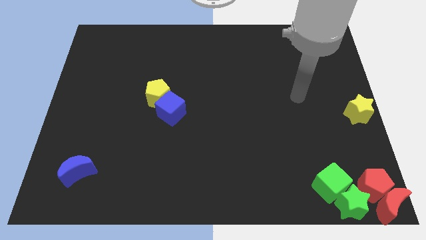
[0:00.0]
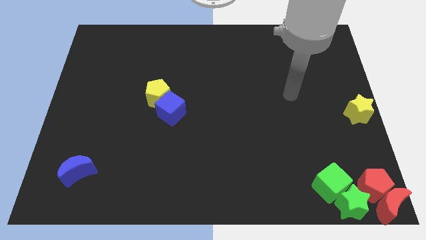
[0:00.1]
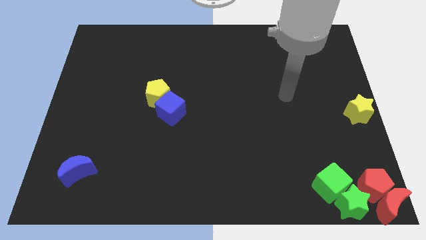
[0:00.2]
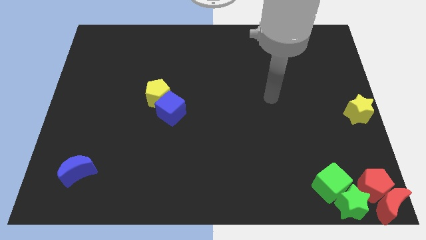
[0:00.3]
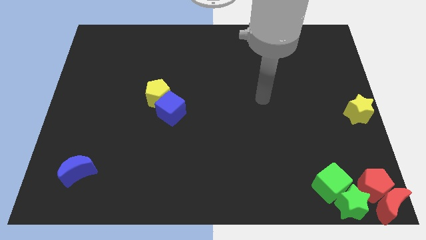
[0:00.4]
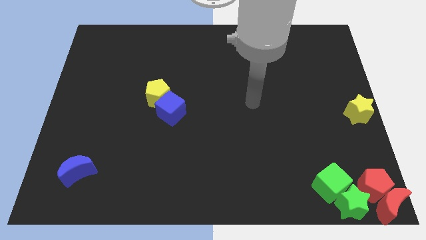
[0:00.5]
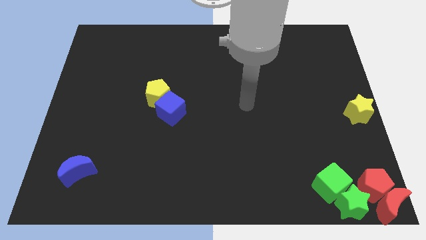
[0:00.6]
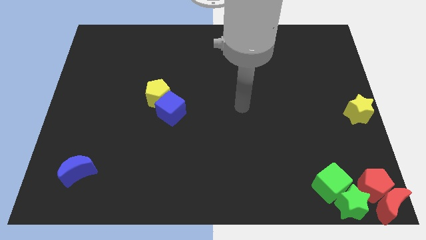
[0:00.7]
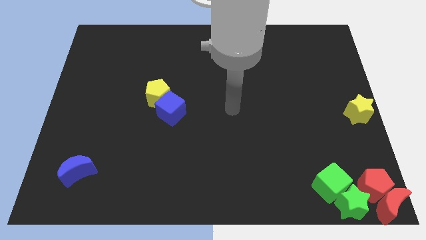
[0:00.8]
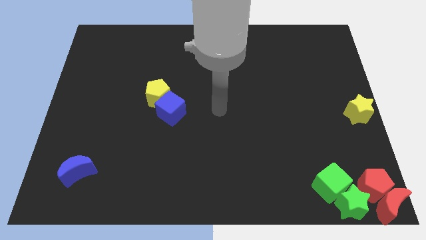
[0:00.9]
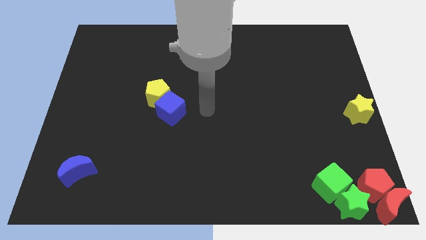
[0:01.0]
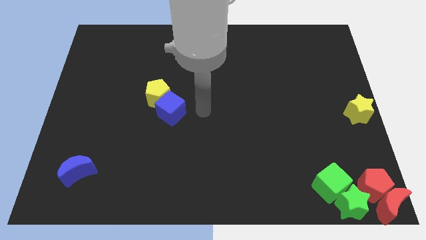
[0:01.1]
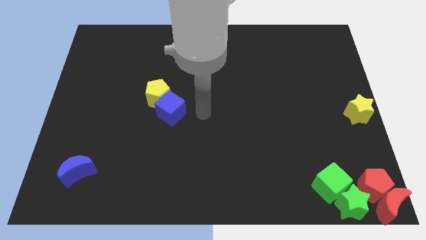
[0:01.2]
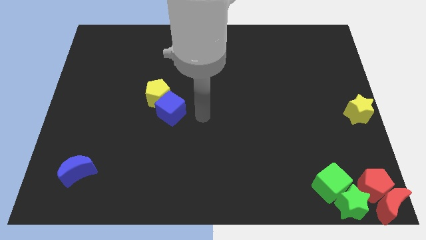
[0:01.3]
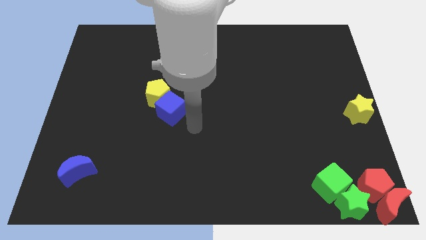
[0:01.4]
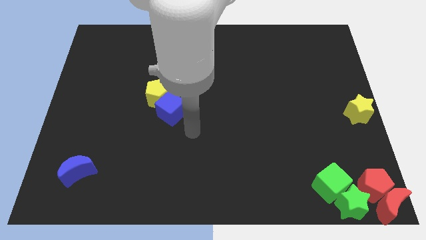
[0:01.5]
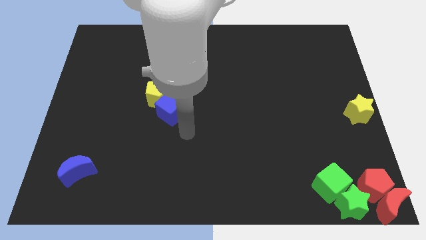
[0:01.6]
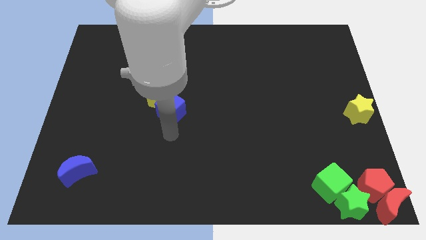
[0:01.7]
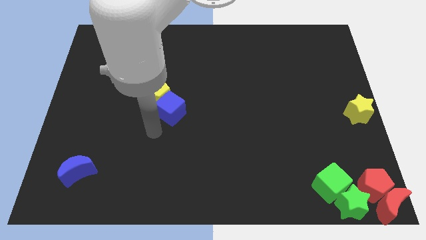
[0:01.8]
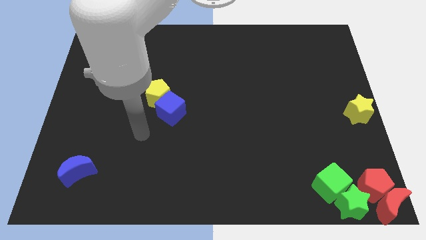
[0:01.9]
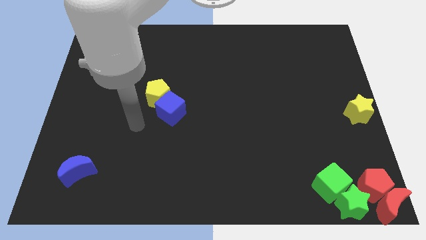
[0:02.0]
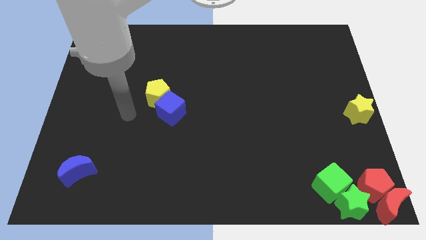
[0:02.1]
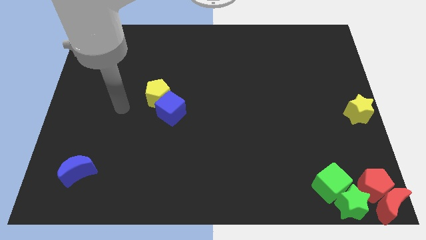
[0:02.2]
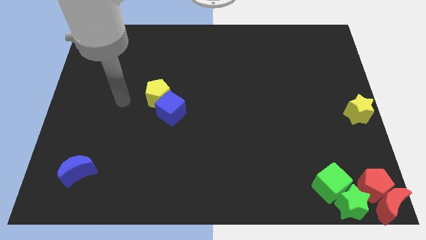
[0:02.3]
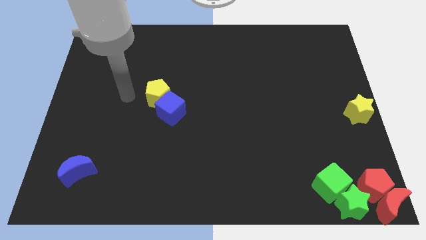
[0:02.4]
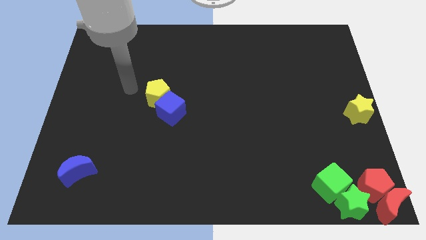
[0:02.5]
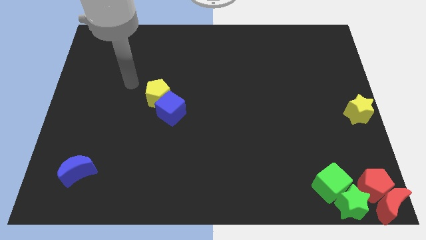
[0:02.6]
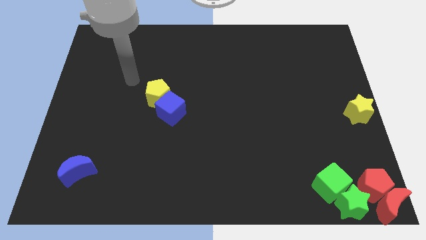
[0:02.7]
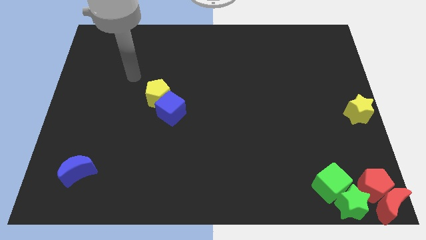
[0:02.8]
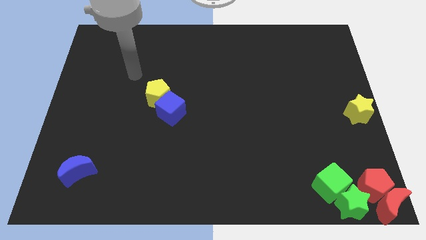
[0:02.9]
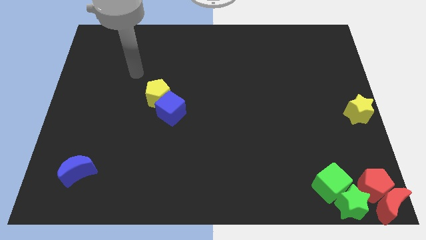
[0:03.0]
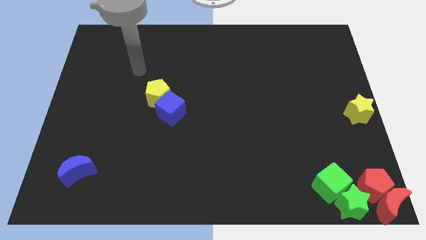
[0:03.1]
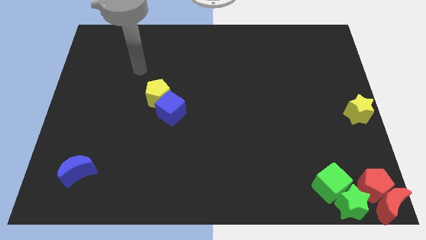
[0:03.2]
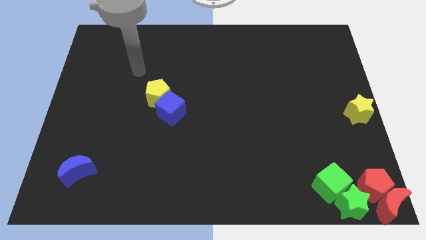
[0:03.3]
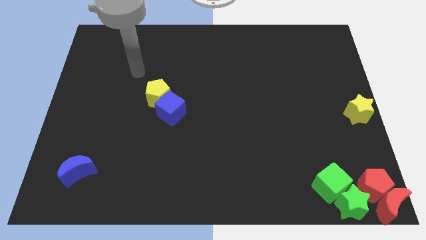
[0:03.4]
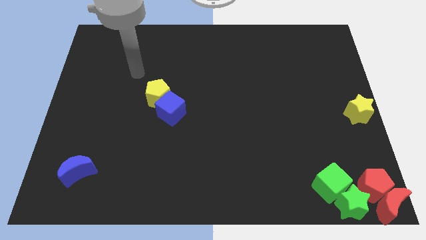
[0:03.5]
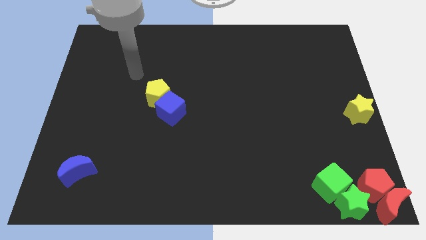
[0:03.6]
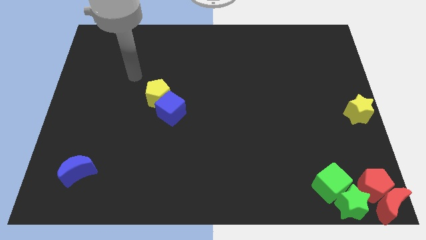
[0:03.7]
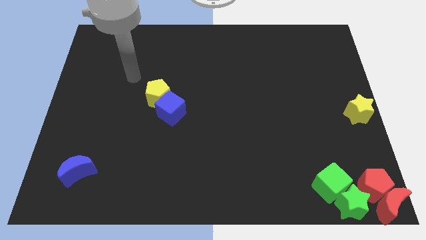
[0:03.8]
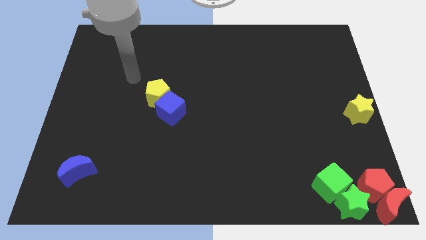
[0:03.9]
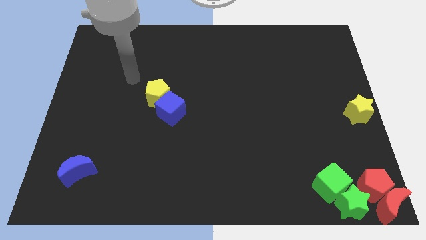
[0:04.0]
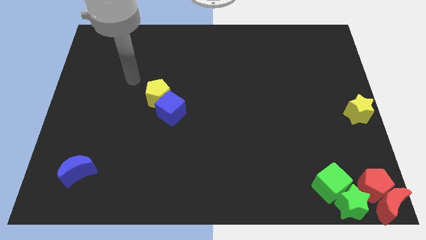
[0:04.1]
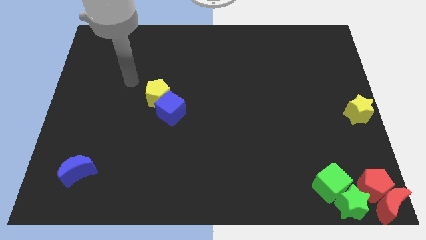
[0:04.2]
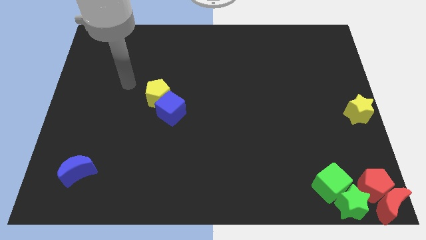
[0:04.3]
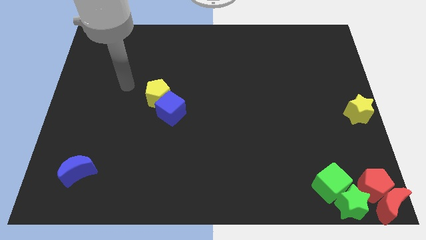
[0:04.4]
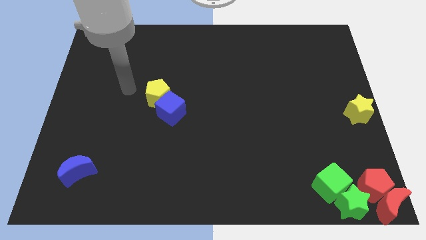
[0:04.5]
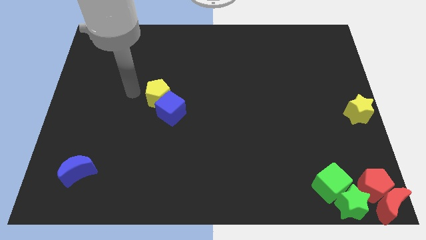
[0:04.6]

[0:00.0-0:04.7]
place the pointer at the top left side of the yellow pentagon

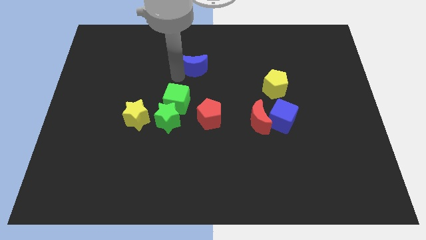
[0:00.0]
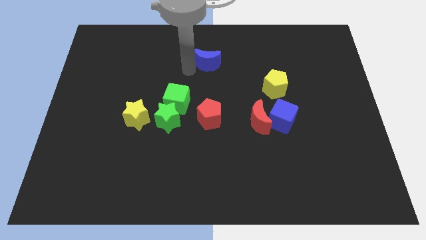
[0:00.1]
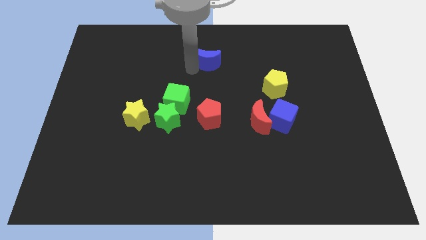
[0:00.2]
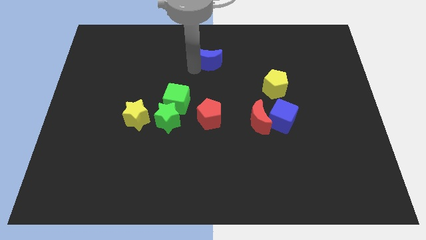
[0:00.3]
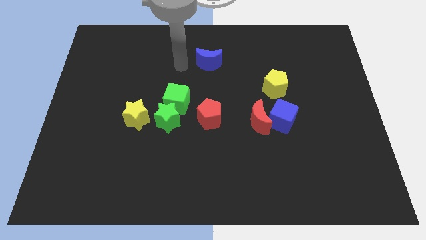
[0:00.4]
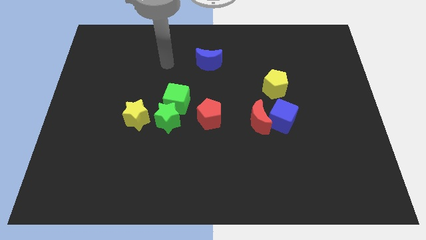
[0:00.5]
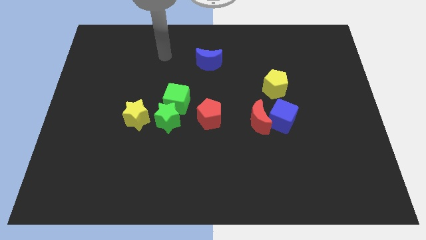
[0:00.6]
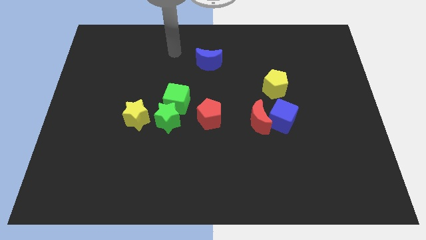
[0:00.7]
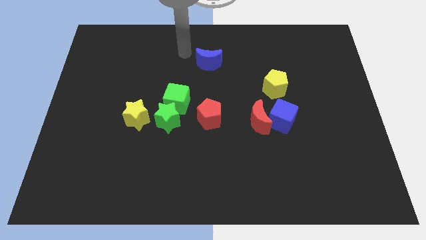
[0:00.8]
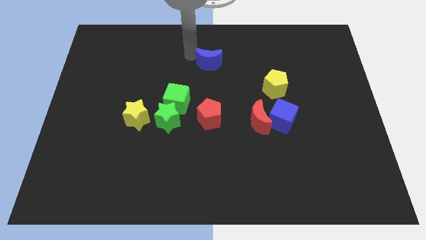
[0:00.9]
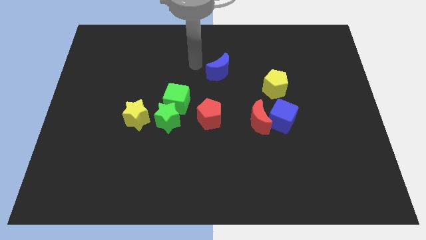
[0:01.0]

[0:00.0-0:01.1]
push blue moon above the red pentagon

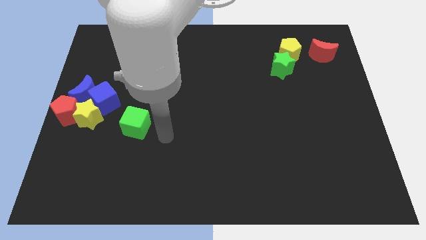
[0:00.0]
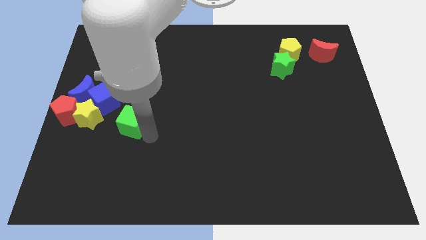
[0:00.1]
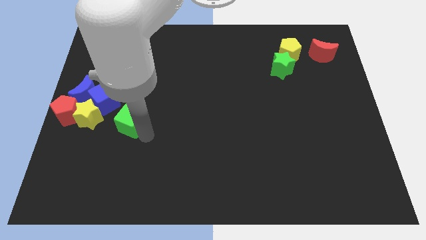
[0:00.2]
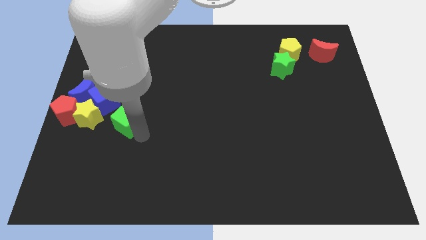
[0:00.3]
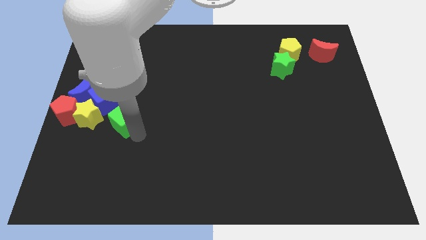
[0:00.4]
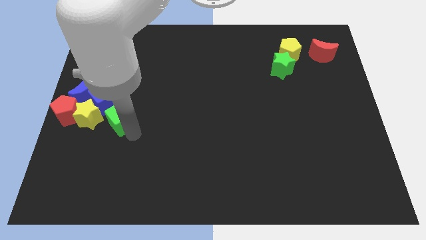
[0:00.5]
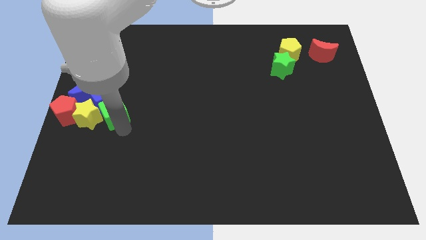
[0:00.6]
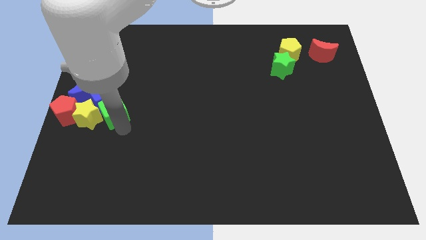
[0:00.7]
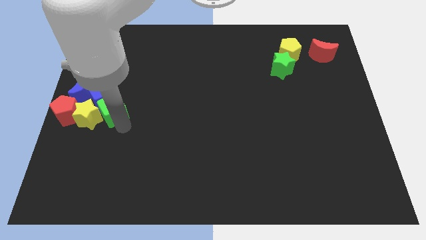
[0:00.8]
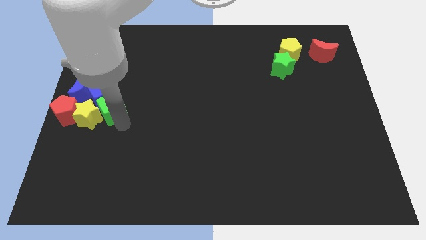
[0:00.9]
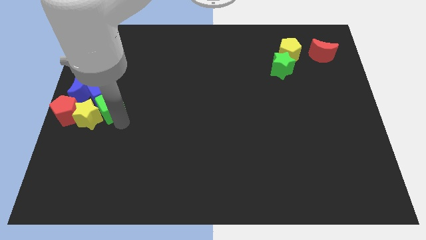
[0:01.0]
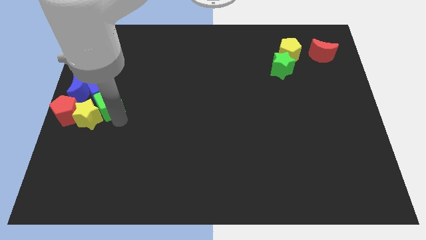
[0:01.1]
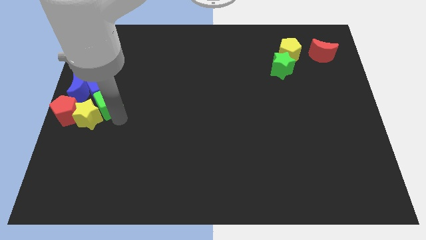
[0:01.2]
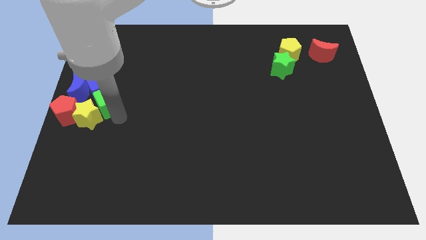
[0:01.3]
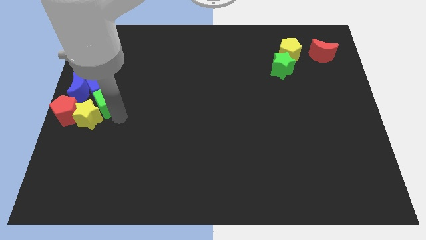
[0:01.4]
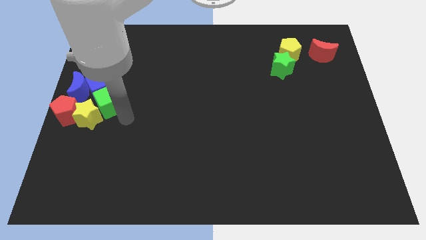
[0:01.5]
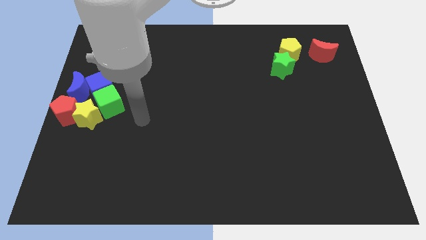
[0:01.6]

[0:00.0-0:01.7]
place green cube in between blue cube and yellow star

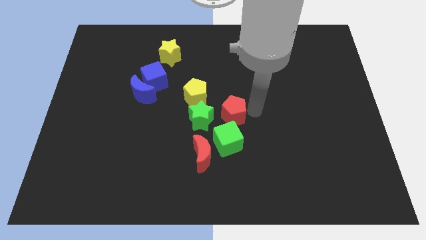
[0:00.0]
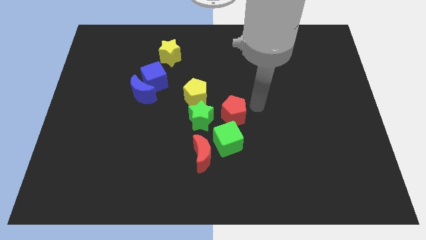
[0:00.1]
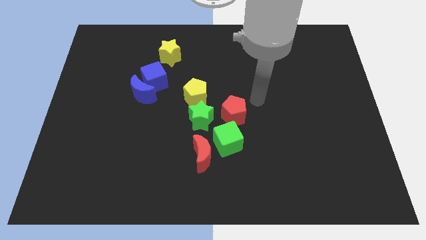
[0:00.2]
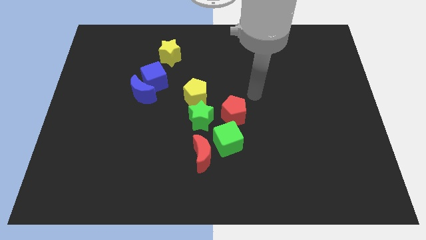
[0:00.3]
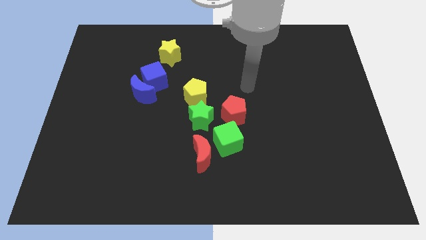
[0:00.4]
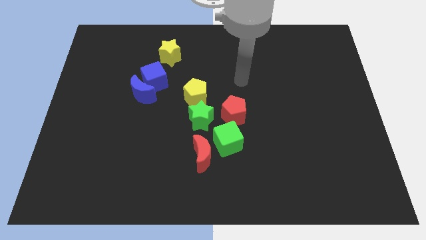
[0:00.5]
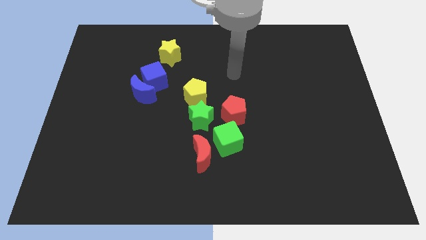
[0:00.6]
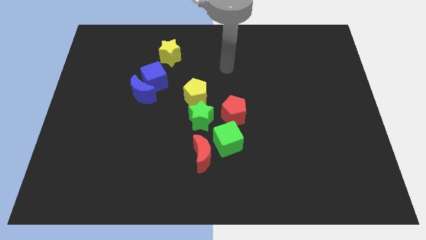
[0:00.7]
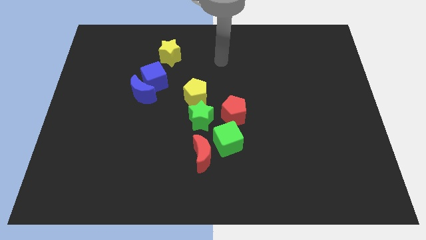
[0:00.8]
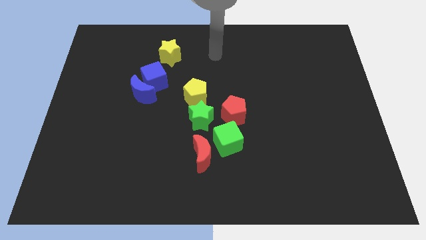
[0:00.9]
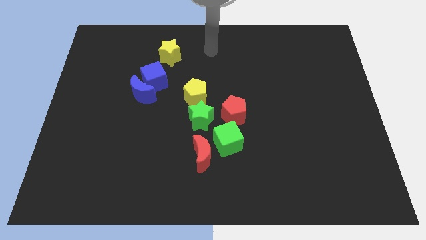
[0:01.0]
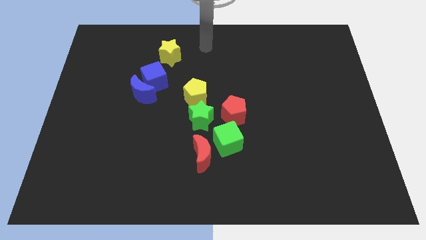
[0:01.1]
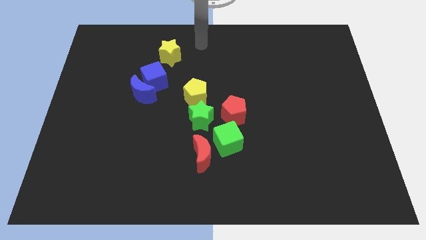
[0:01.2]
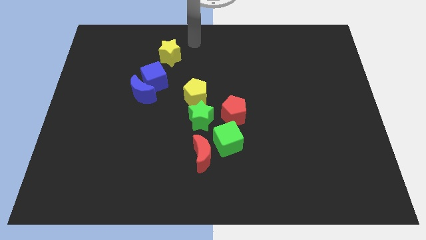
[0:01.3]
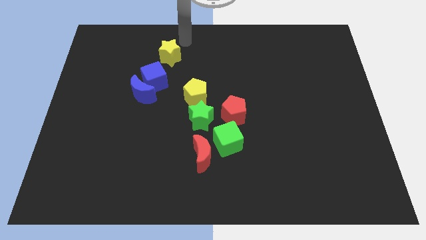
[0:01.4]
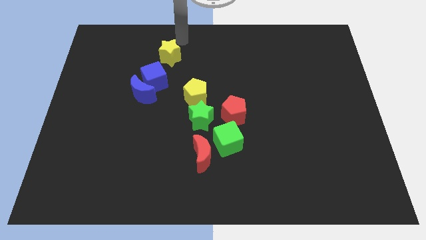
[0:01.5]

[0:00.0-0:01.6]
move the arm away from red pentagon

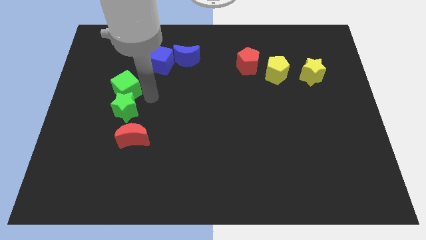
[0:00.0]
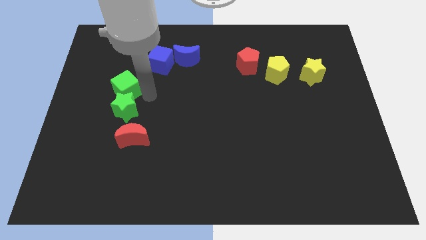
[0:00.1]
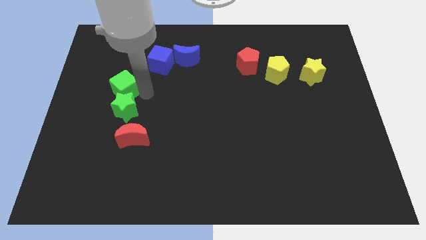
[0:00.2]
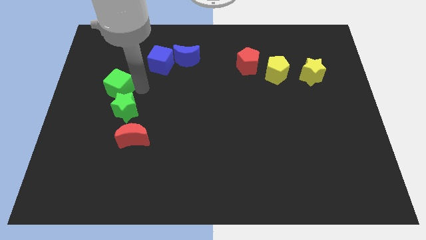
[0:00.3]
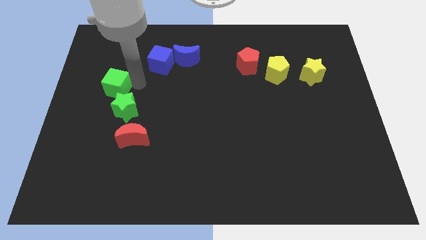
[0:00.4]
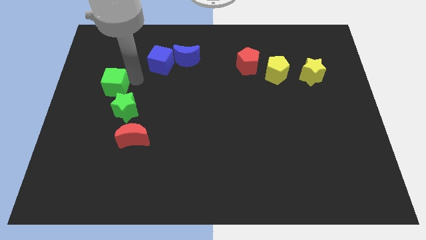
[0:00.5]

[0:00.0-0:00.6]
move the green cube slightly left to the board
